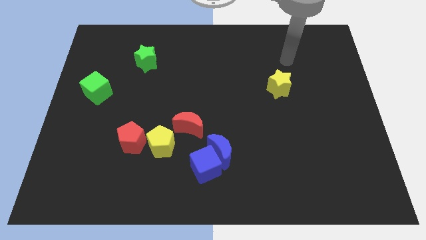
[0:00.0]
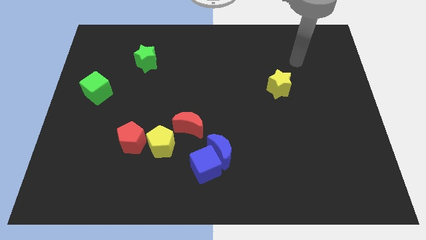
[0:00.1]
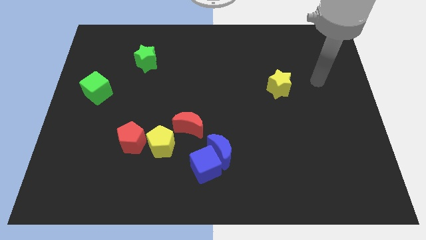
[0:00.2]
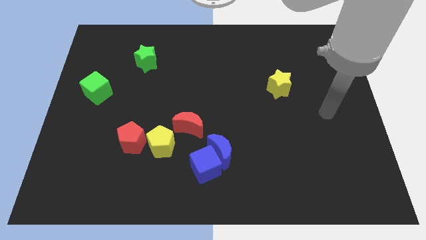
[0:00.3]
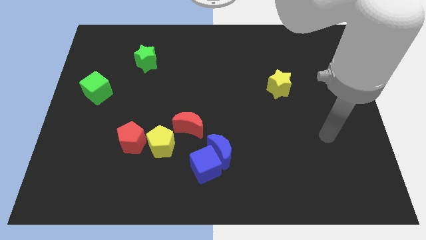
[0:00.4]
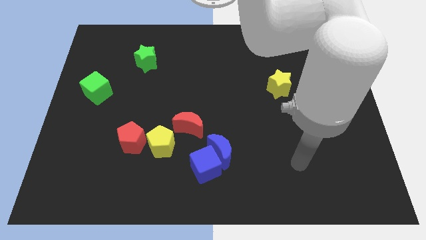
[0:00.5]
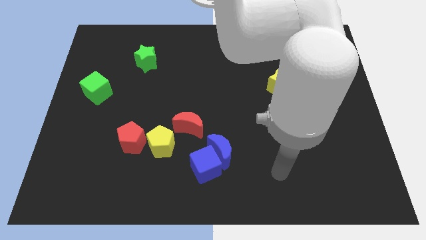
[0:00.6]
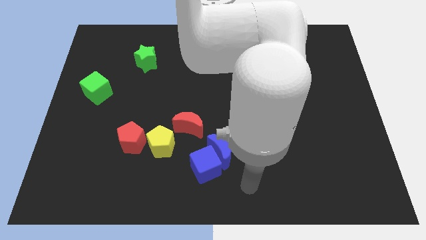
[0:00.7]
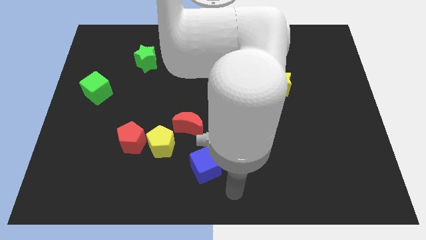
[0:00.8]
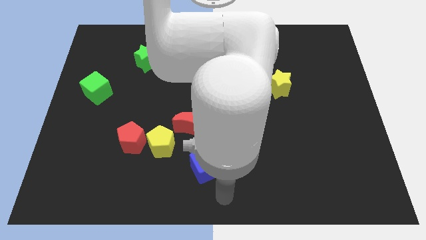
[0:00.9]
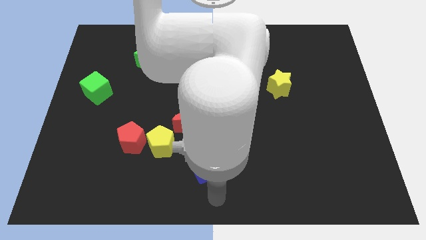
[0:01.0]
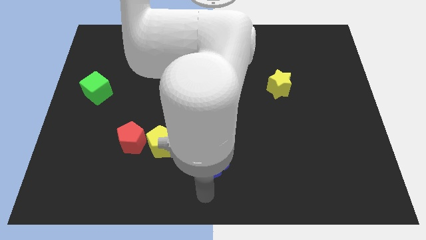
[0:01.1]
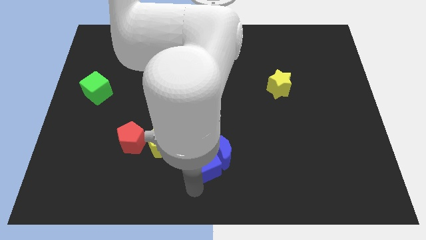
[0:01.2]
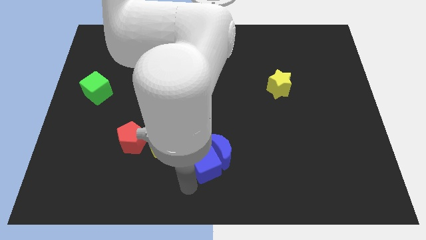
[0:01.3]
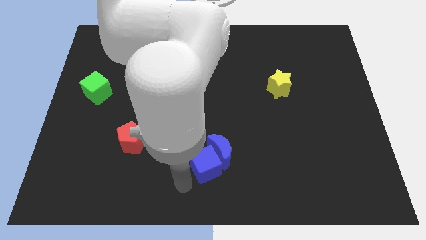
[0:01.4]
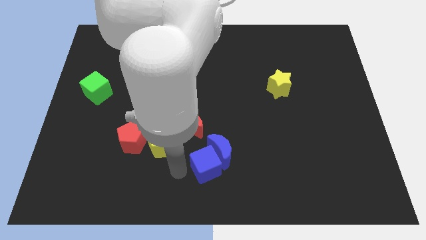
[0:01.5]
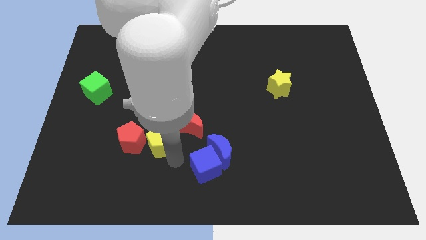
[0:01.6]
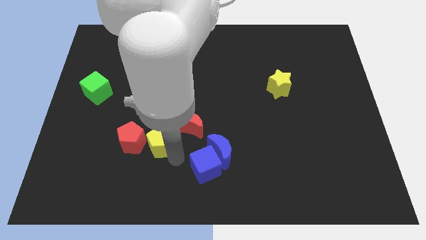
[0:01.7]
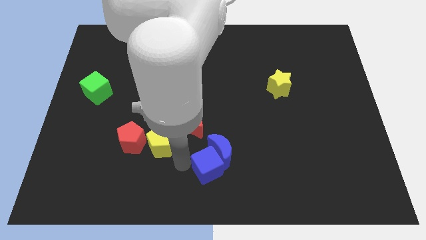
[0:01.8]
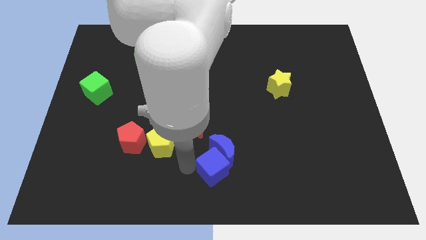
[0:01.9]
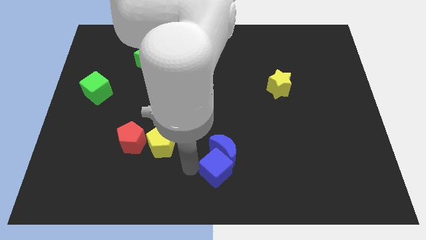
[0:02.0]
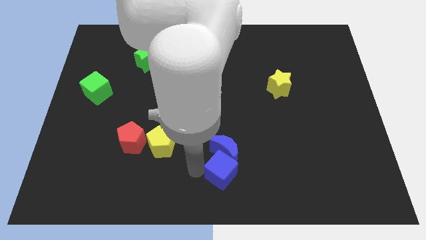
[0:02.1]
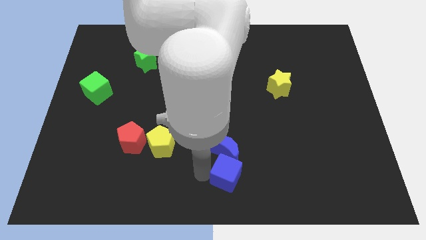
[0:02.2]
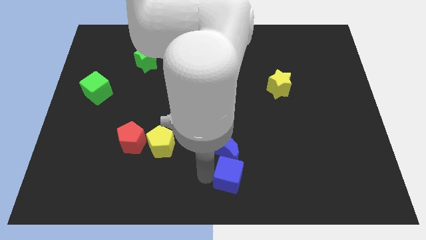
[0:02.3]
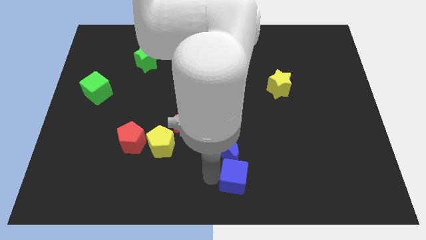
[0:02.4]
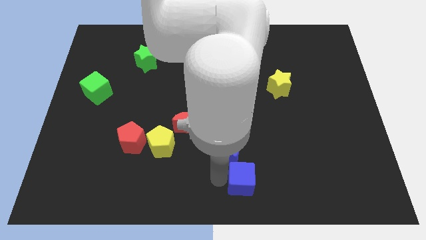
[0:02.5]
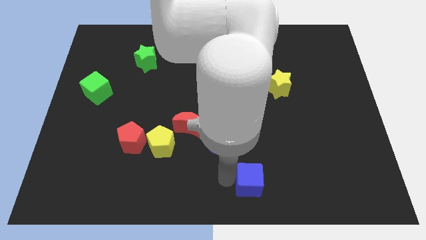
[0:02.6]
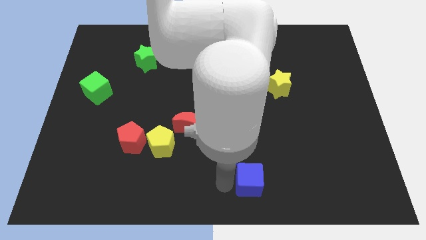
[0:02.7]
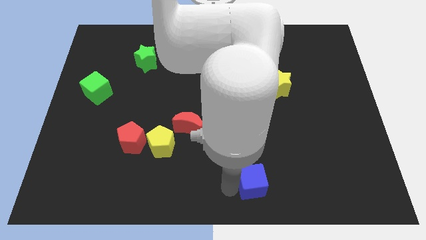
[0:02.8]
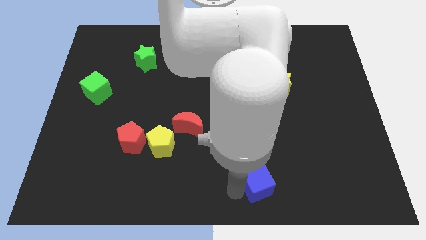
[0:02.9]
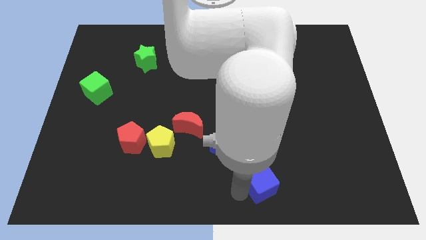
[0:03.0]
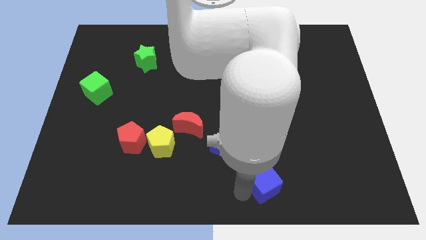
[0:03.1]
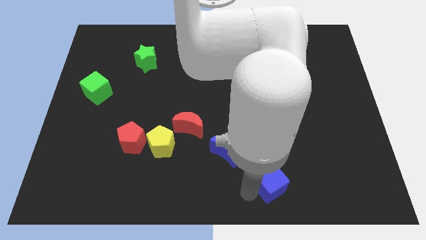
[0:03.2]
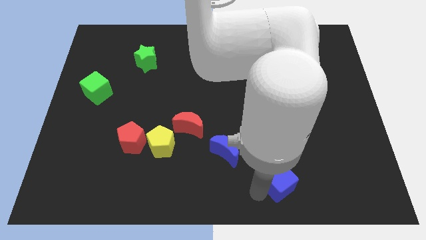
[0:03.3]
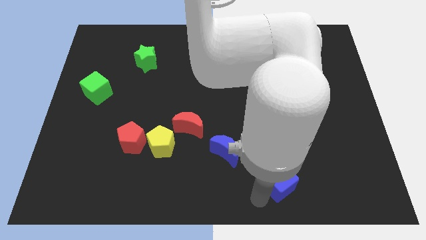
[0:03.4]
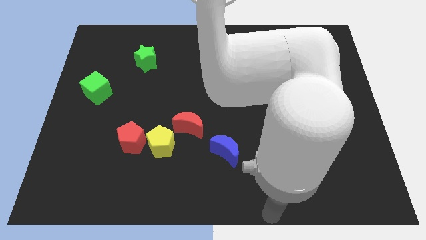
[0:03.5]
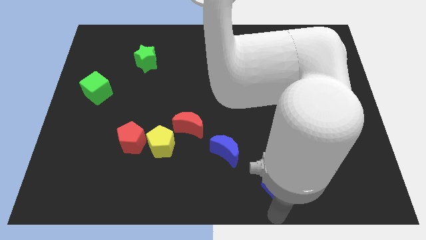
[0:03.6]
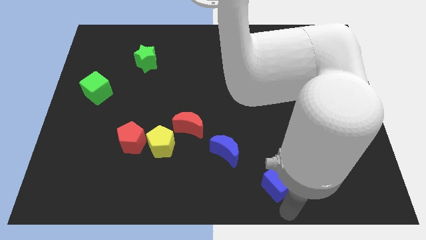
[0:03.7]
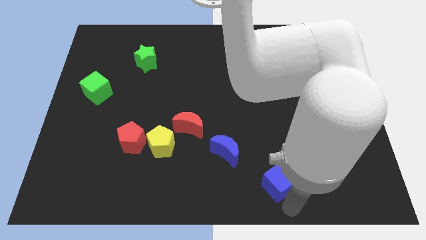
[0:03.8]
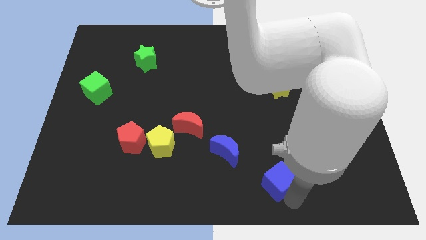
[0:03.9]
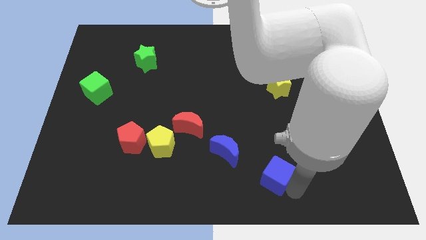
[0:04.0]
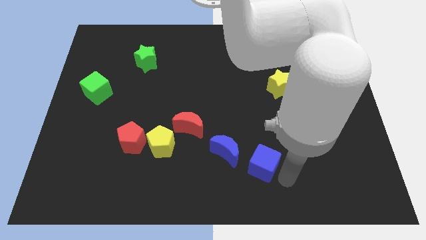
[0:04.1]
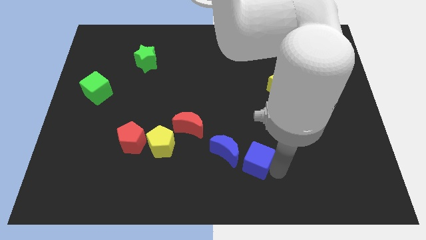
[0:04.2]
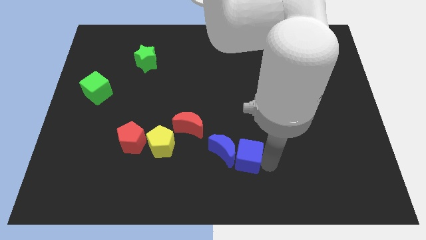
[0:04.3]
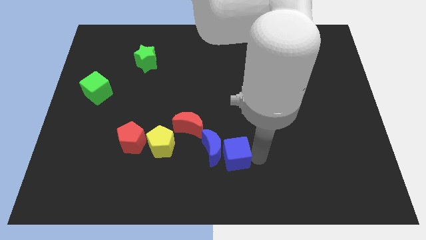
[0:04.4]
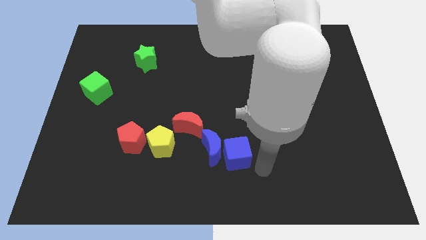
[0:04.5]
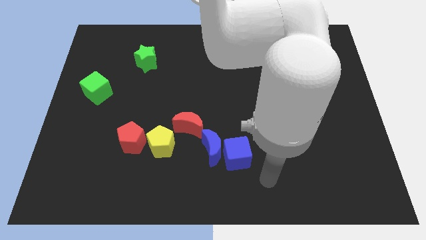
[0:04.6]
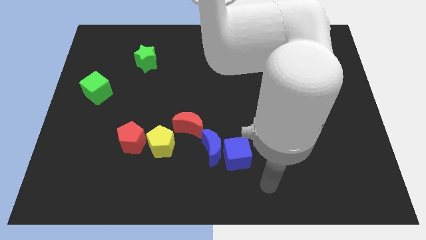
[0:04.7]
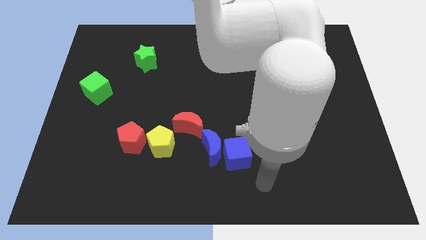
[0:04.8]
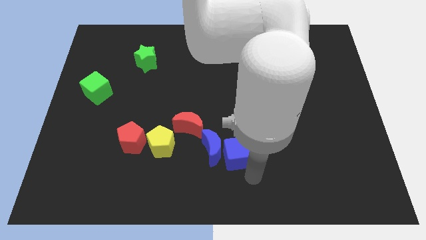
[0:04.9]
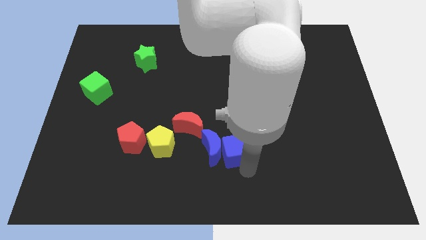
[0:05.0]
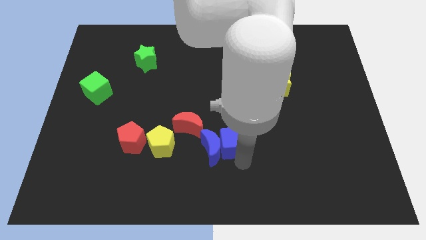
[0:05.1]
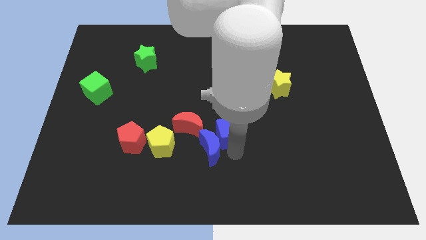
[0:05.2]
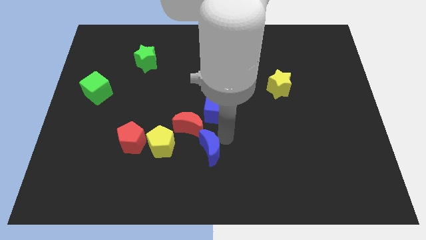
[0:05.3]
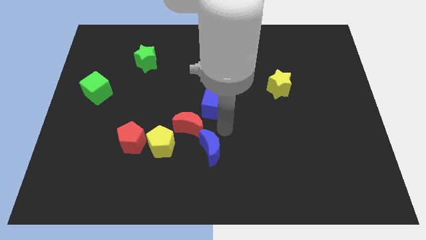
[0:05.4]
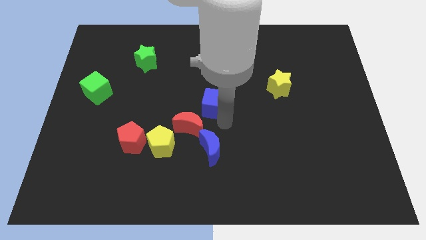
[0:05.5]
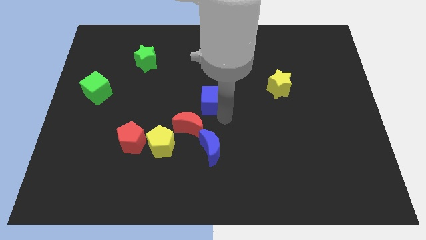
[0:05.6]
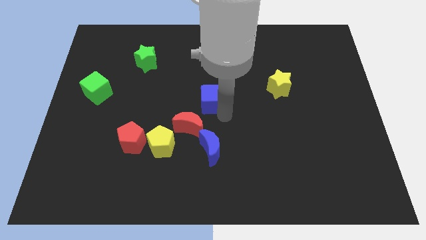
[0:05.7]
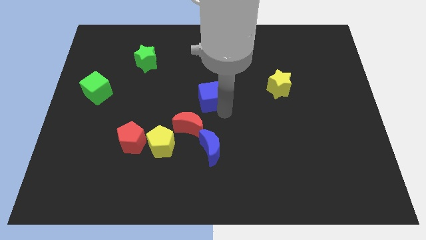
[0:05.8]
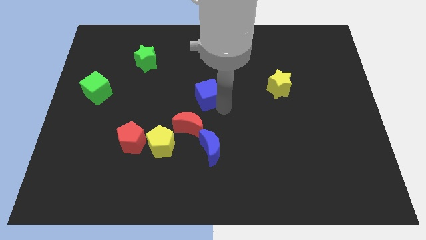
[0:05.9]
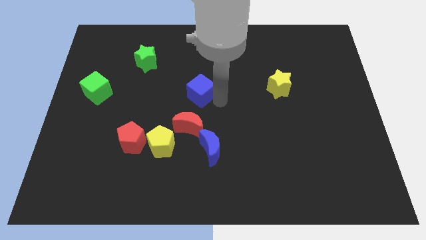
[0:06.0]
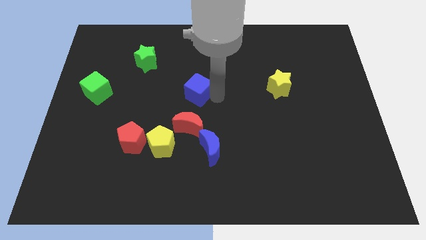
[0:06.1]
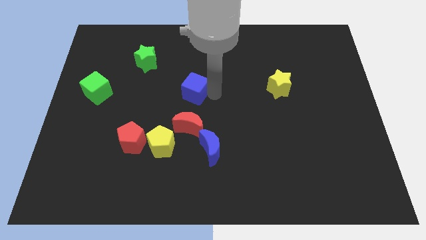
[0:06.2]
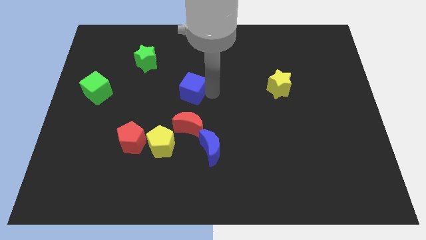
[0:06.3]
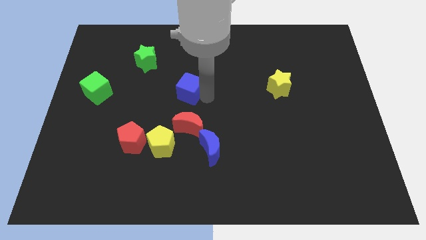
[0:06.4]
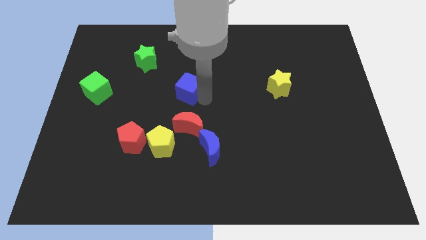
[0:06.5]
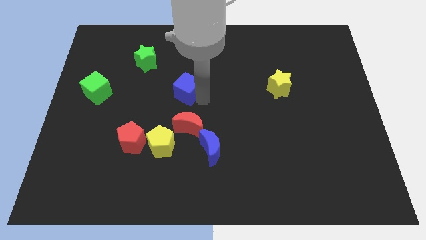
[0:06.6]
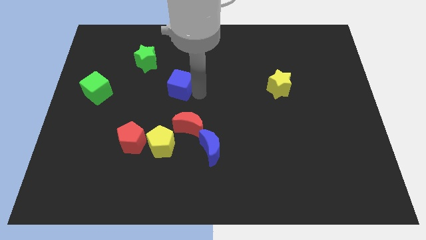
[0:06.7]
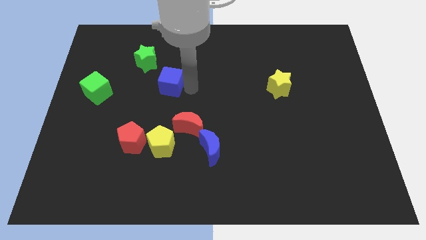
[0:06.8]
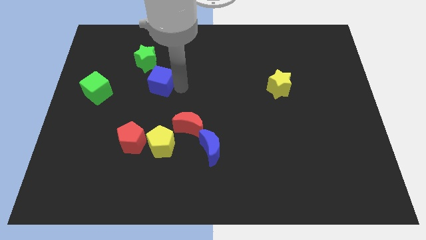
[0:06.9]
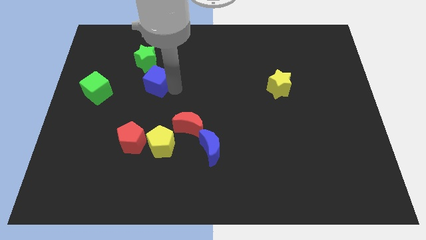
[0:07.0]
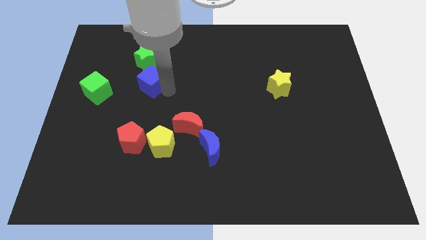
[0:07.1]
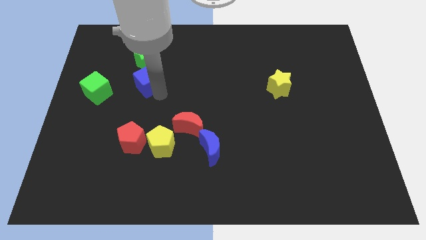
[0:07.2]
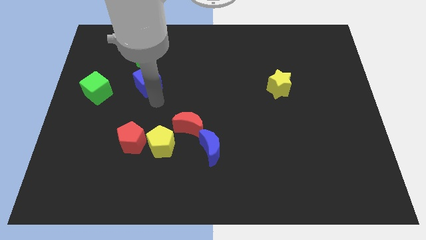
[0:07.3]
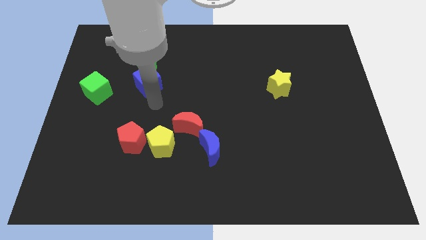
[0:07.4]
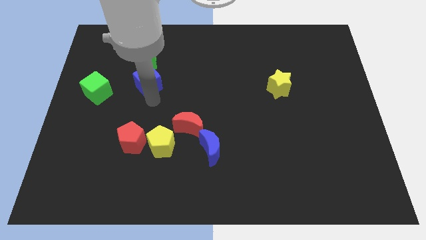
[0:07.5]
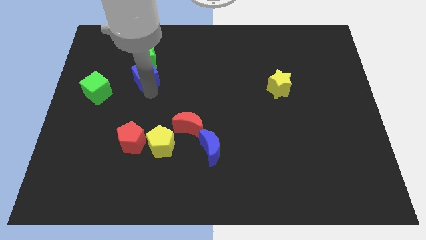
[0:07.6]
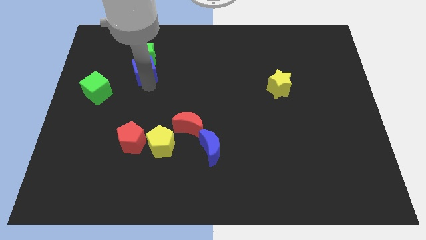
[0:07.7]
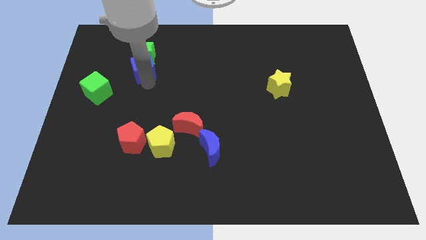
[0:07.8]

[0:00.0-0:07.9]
push the blue cube close to the green star

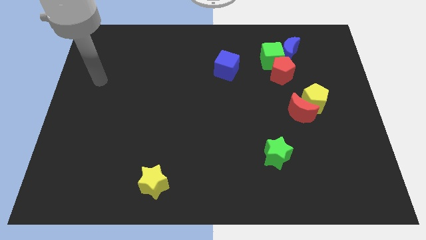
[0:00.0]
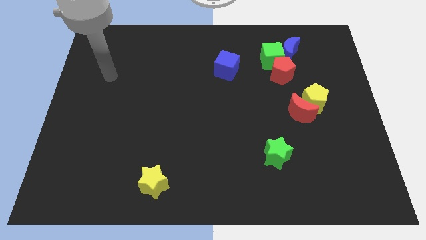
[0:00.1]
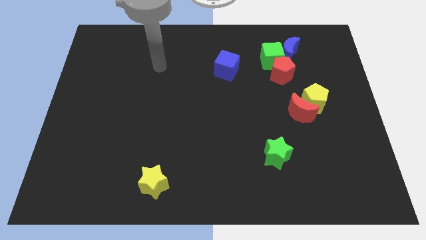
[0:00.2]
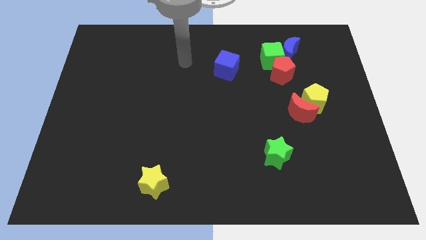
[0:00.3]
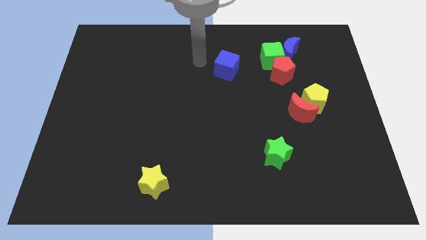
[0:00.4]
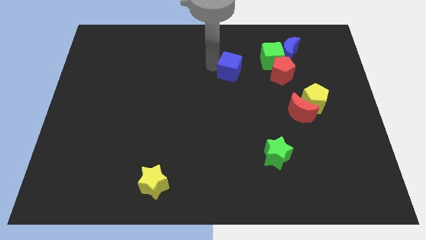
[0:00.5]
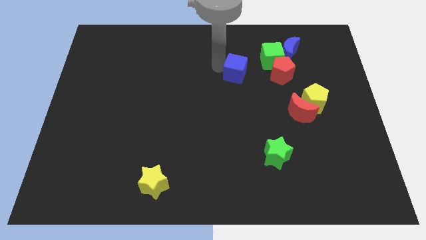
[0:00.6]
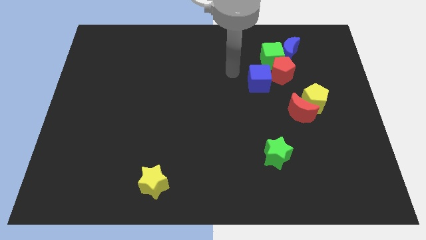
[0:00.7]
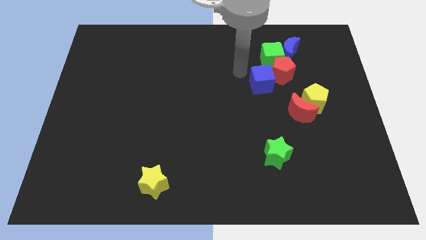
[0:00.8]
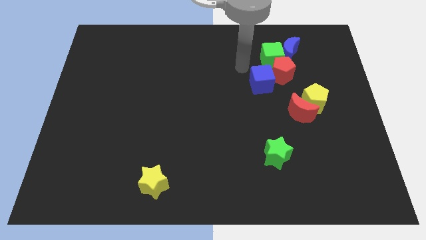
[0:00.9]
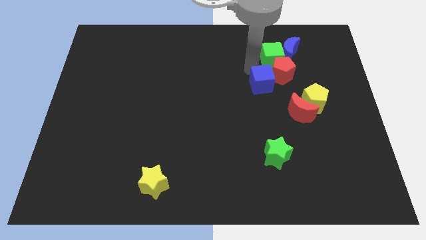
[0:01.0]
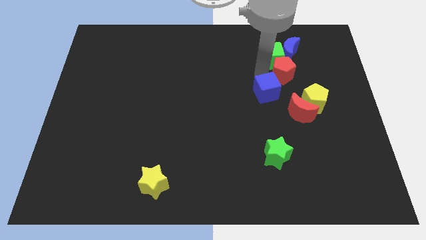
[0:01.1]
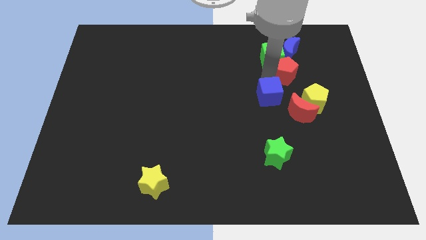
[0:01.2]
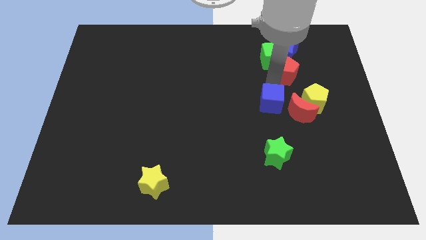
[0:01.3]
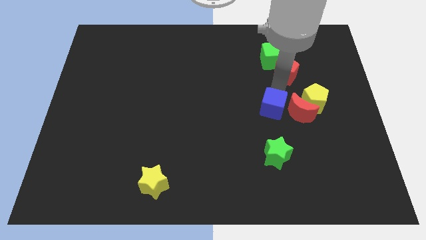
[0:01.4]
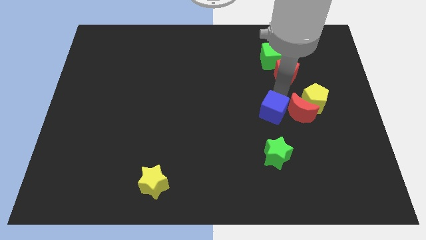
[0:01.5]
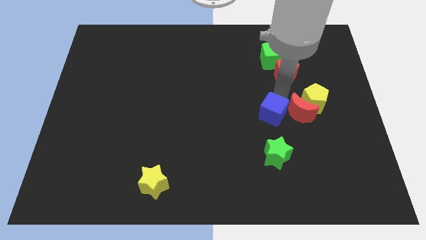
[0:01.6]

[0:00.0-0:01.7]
push the blue cube to the red moon
